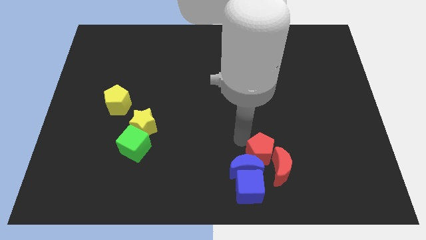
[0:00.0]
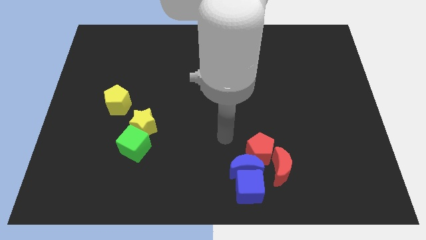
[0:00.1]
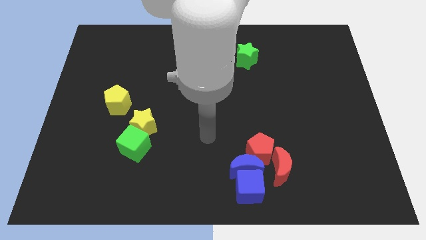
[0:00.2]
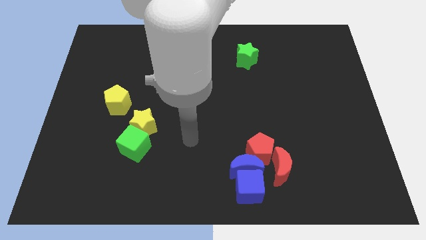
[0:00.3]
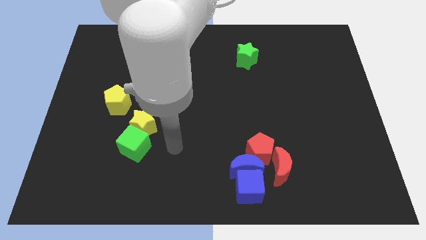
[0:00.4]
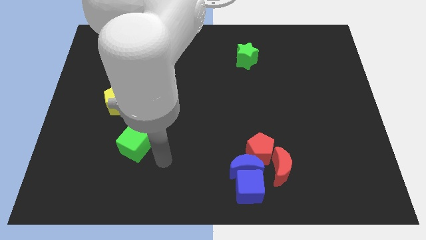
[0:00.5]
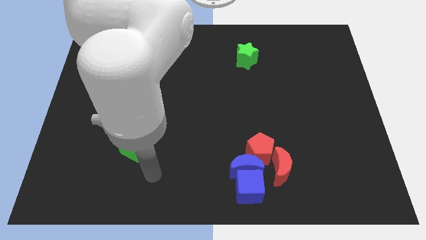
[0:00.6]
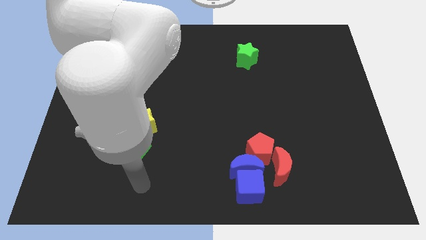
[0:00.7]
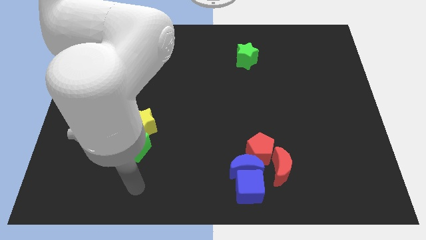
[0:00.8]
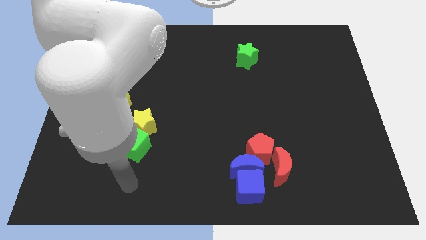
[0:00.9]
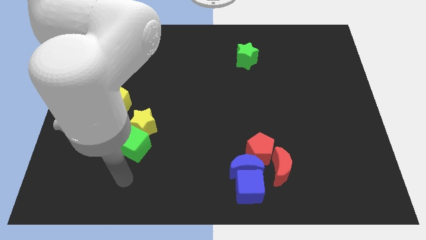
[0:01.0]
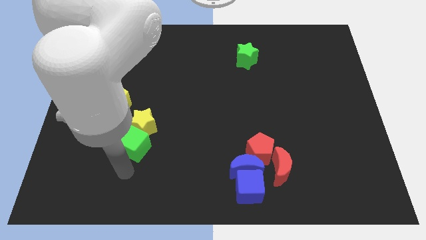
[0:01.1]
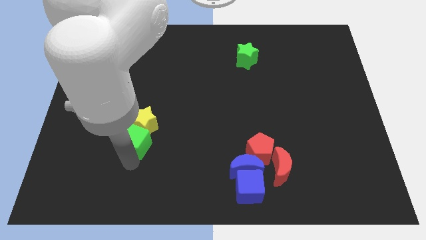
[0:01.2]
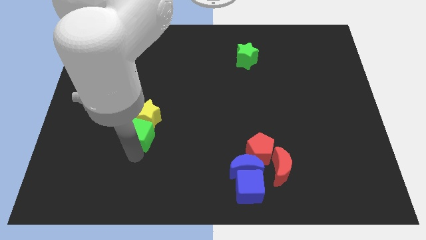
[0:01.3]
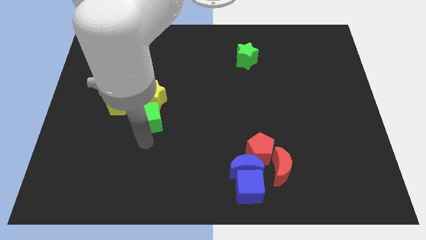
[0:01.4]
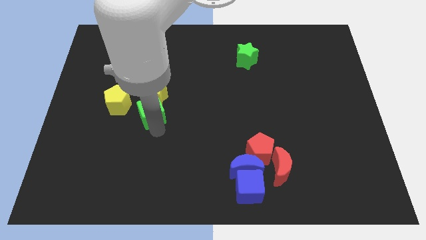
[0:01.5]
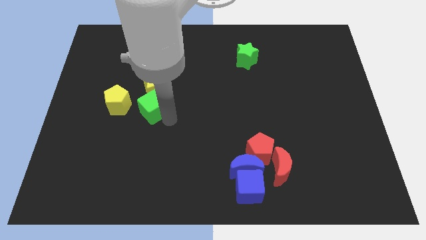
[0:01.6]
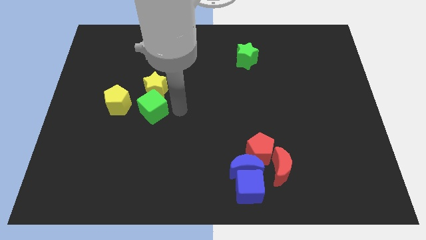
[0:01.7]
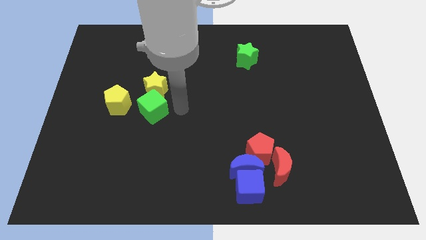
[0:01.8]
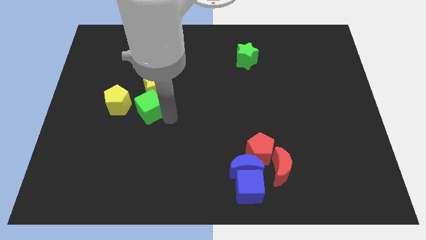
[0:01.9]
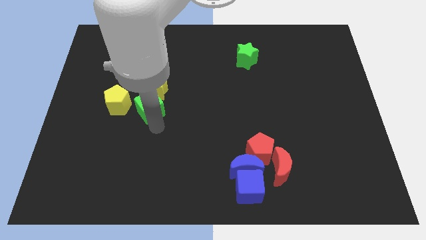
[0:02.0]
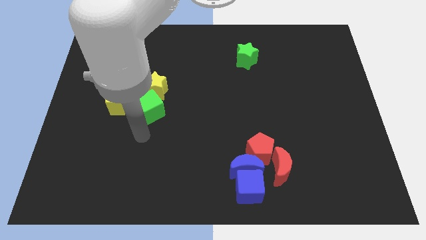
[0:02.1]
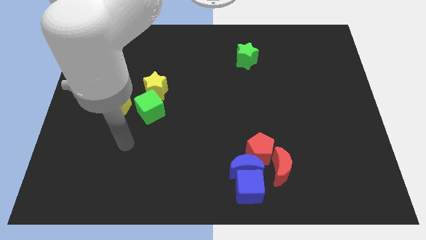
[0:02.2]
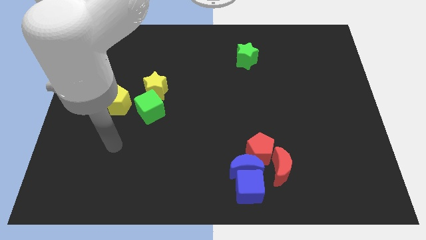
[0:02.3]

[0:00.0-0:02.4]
push the green cube and the yellow star up slightly

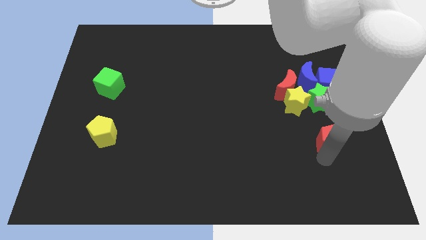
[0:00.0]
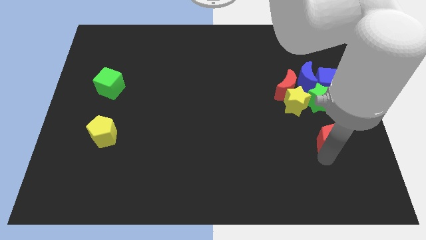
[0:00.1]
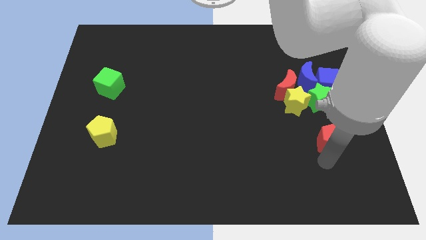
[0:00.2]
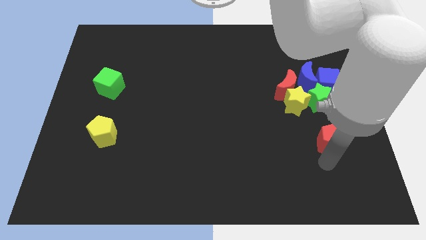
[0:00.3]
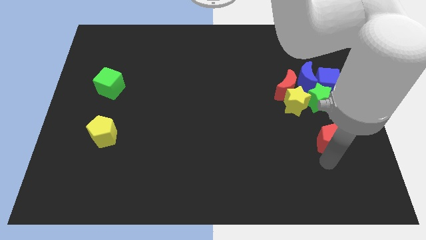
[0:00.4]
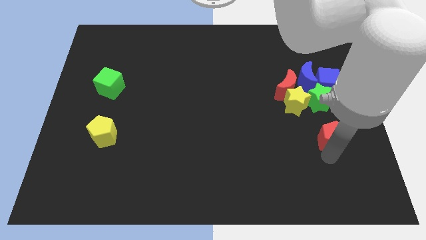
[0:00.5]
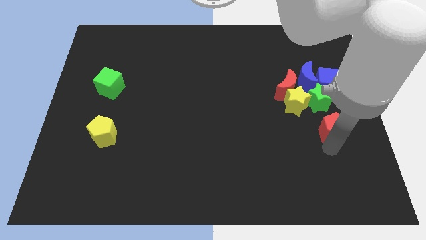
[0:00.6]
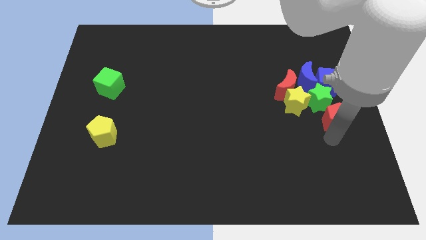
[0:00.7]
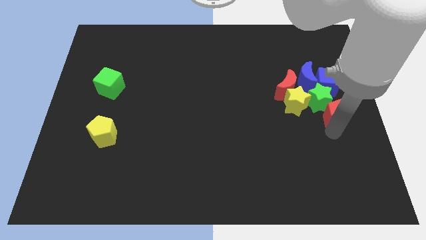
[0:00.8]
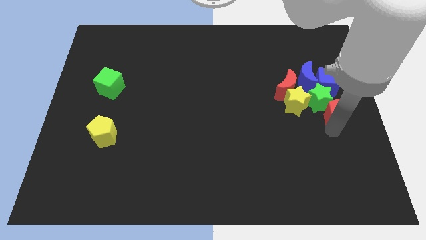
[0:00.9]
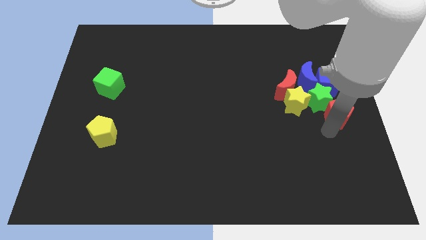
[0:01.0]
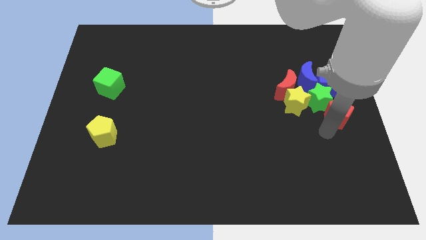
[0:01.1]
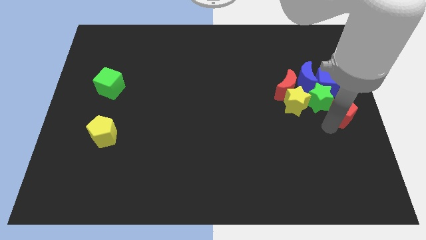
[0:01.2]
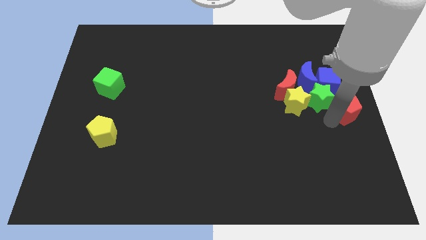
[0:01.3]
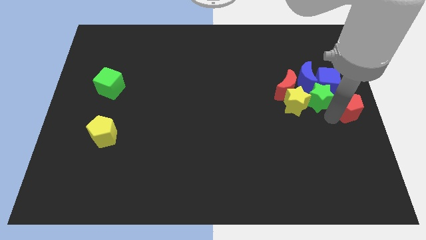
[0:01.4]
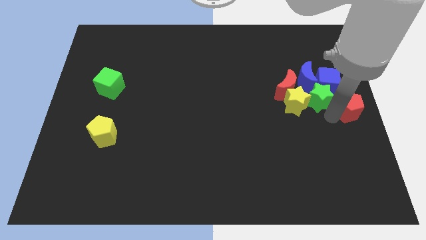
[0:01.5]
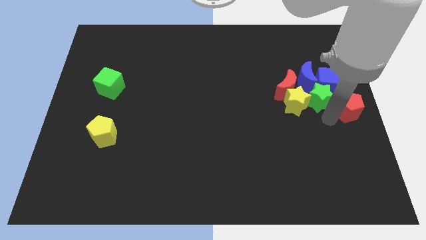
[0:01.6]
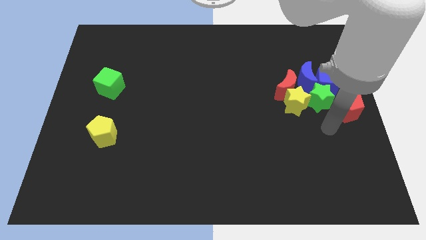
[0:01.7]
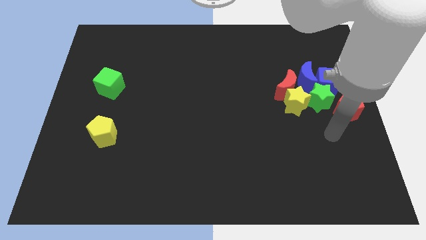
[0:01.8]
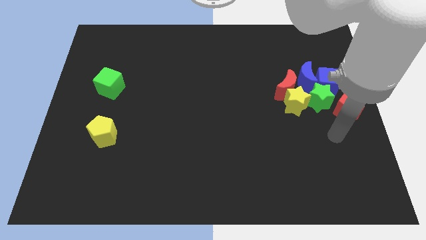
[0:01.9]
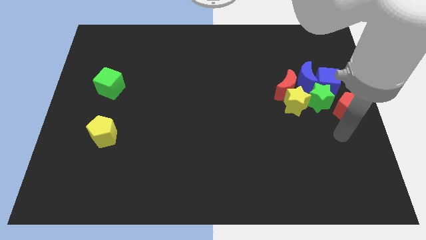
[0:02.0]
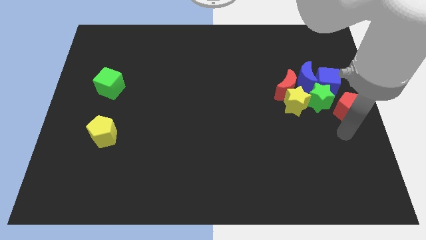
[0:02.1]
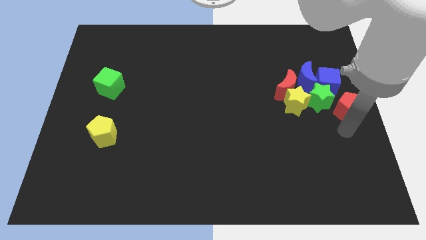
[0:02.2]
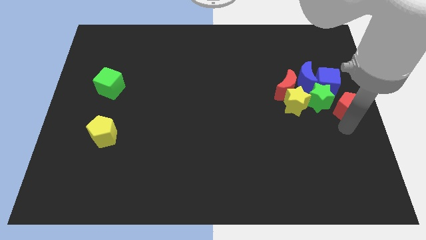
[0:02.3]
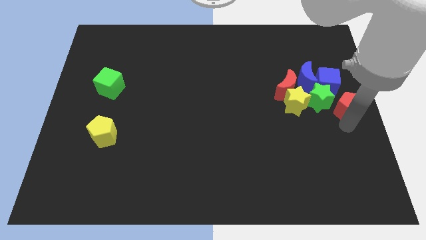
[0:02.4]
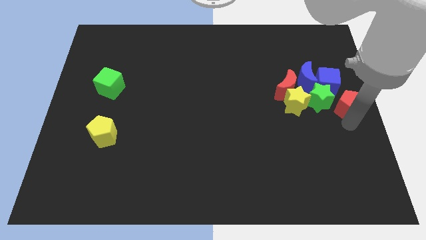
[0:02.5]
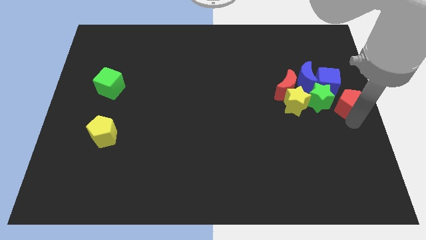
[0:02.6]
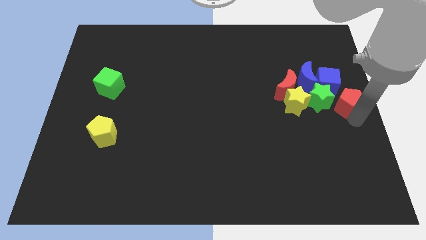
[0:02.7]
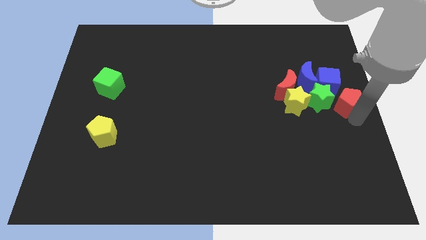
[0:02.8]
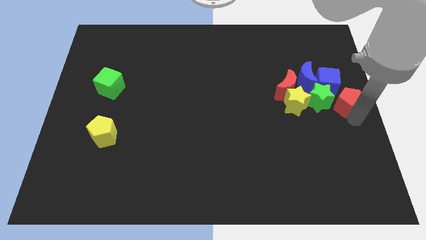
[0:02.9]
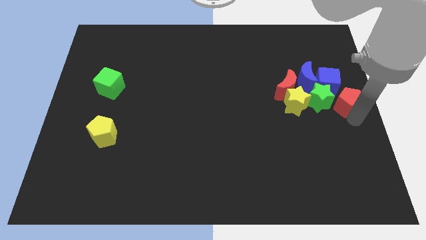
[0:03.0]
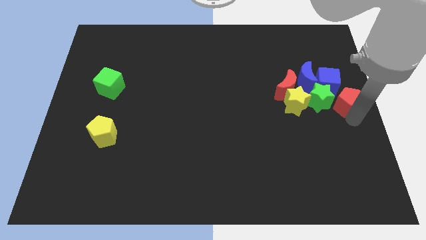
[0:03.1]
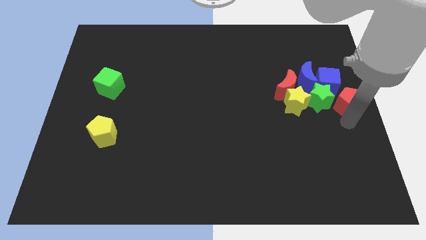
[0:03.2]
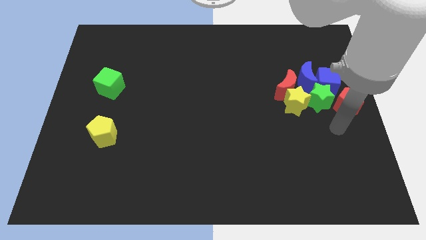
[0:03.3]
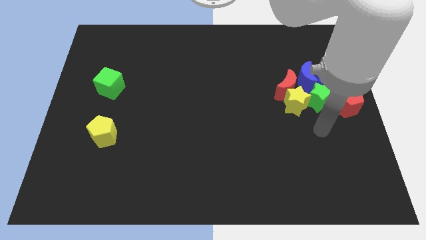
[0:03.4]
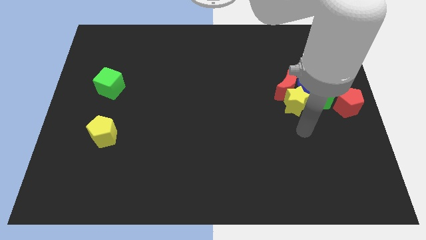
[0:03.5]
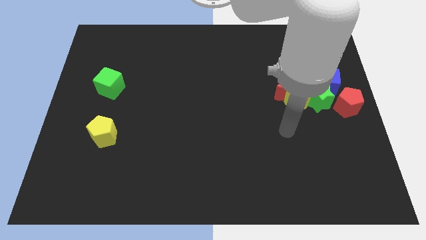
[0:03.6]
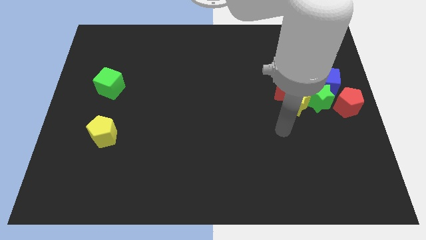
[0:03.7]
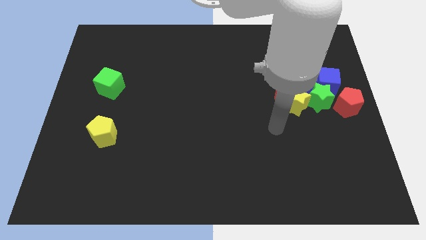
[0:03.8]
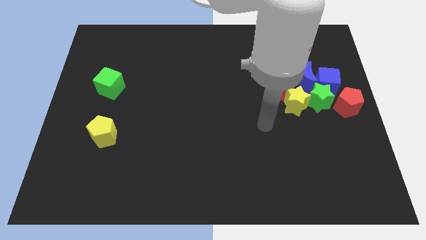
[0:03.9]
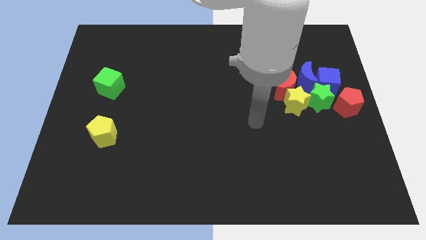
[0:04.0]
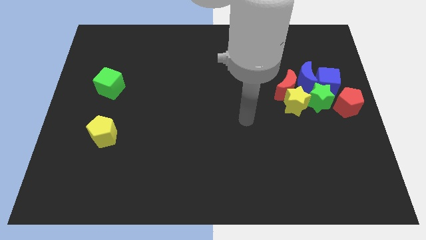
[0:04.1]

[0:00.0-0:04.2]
drag the red pentagon and place it next to the green star

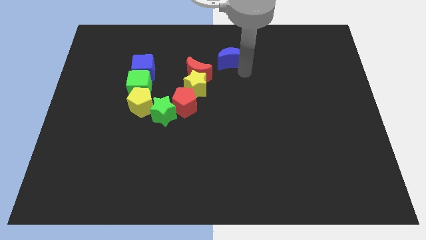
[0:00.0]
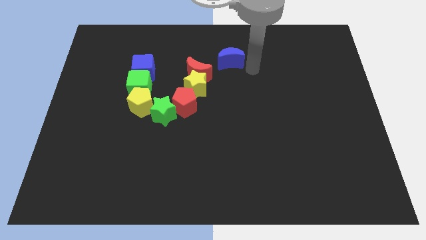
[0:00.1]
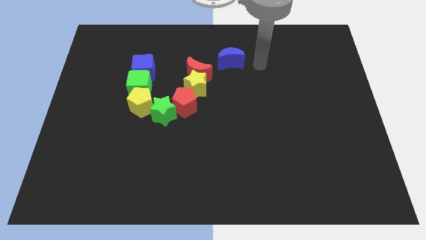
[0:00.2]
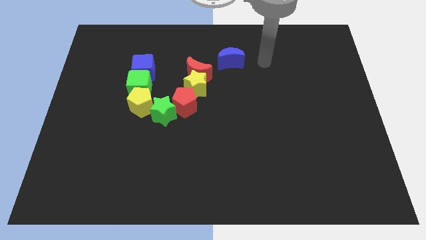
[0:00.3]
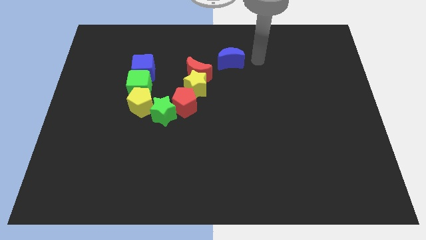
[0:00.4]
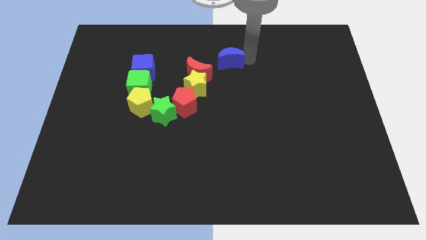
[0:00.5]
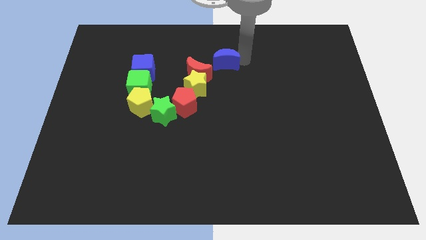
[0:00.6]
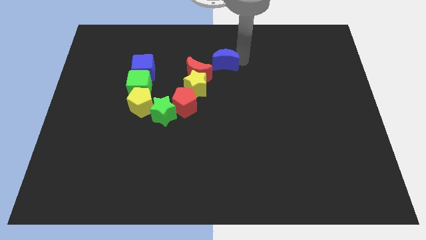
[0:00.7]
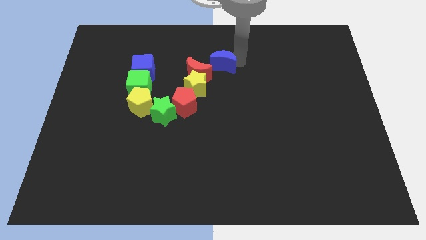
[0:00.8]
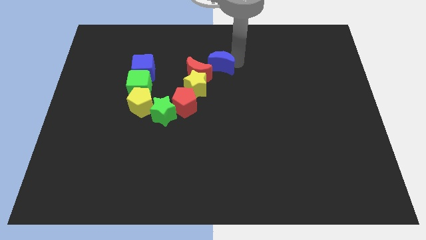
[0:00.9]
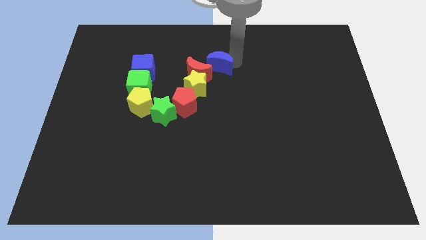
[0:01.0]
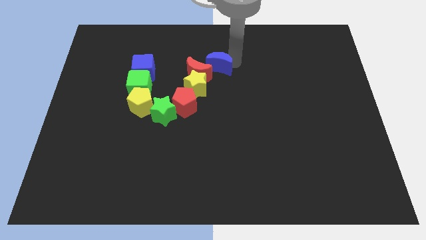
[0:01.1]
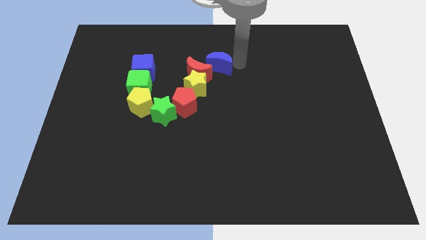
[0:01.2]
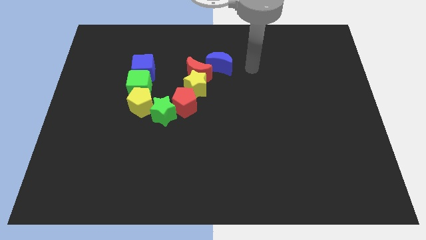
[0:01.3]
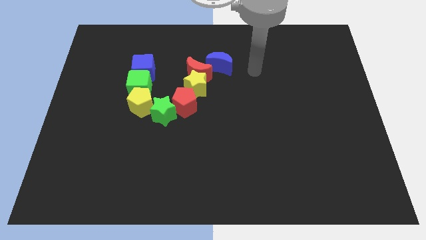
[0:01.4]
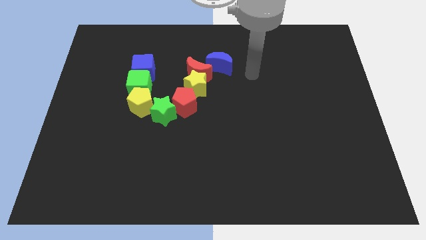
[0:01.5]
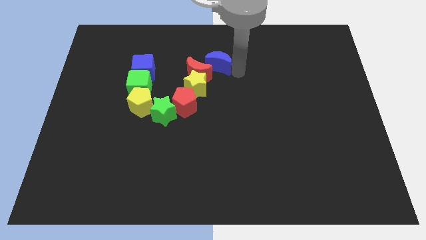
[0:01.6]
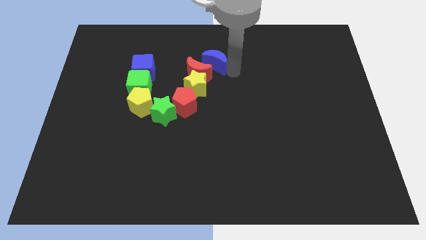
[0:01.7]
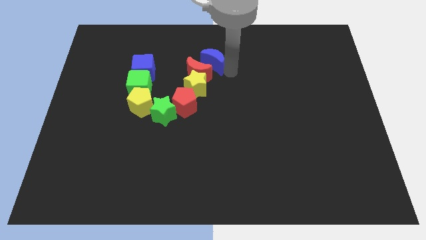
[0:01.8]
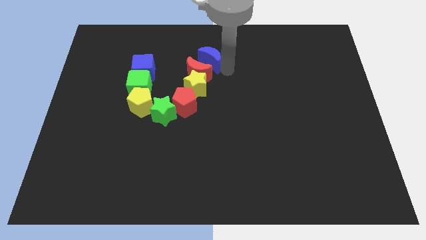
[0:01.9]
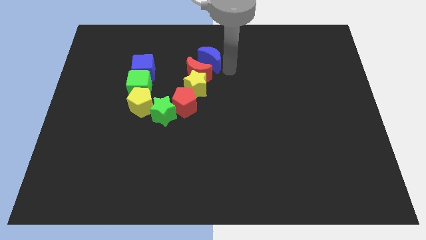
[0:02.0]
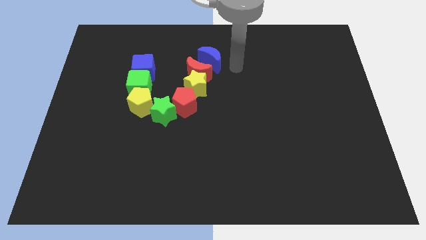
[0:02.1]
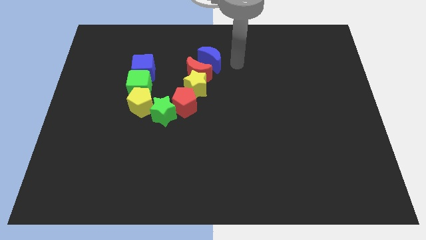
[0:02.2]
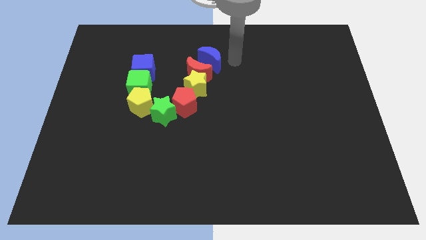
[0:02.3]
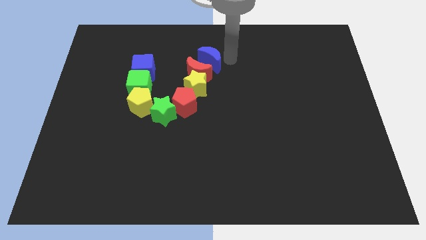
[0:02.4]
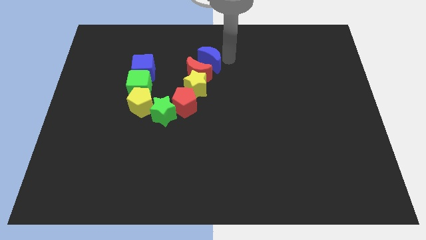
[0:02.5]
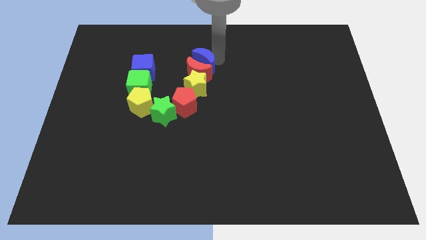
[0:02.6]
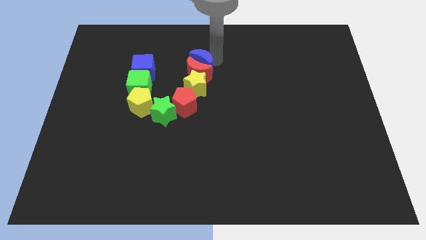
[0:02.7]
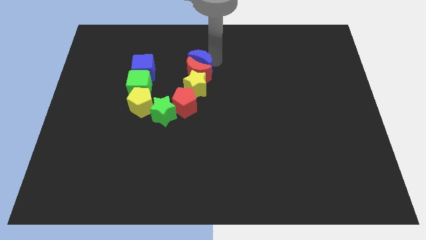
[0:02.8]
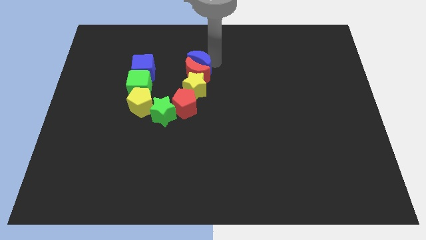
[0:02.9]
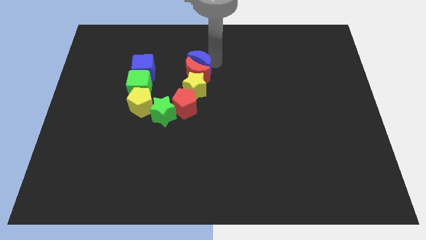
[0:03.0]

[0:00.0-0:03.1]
make a ushape of blocks by adding the blue crescent
